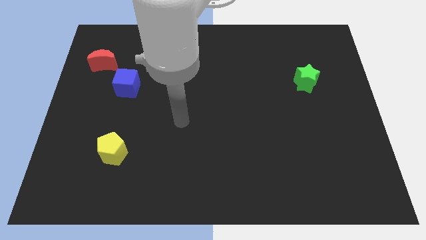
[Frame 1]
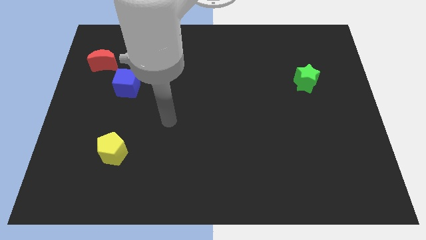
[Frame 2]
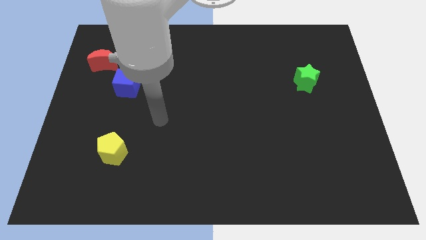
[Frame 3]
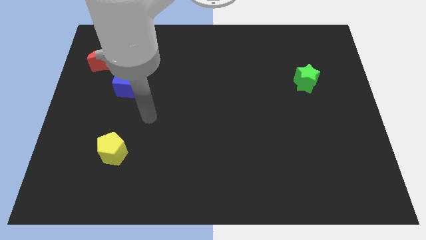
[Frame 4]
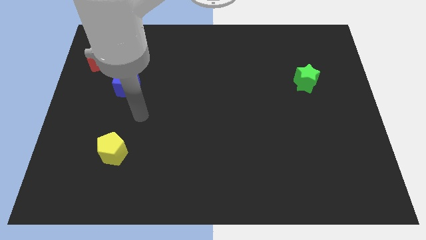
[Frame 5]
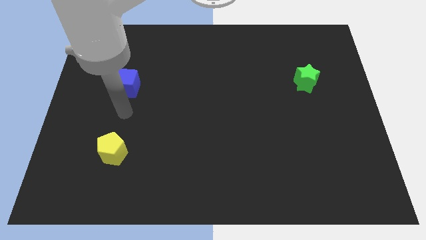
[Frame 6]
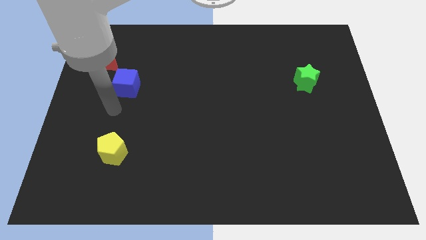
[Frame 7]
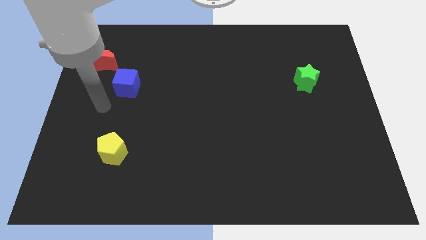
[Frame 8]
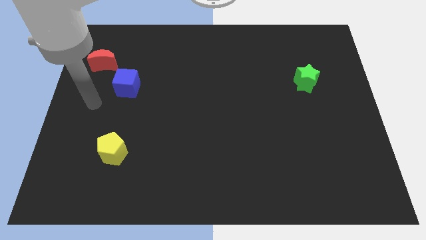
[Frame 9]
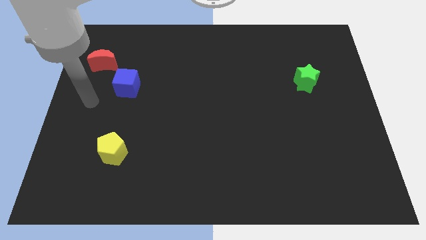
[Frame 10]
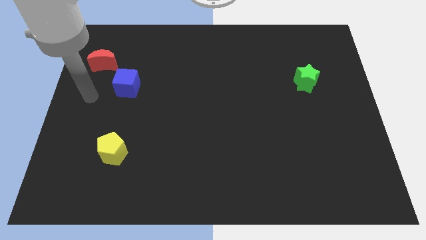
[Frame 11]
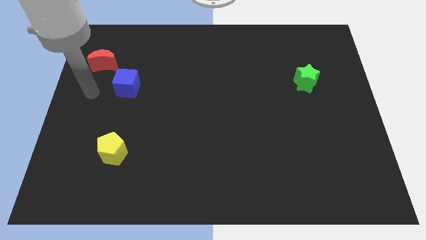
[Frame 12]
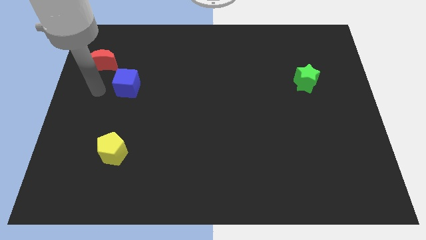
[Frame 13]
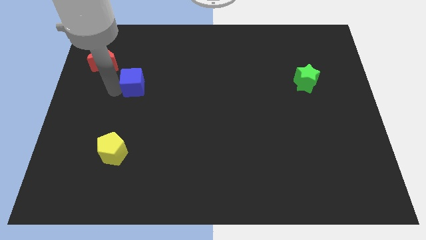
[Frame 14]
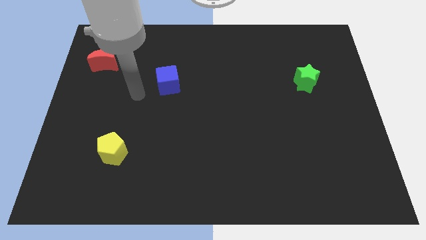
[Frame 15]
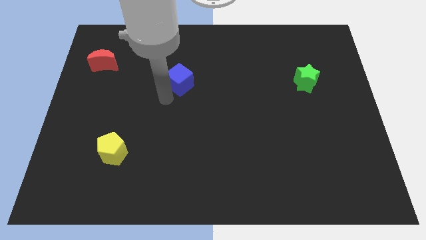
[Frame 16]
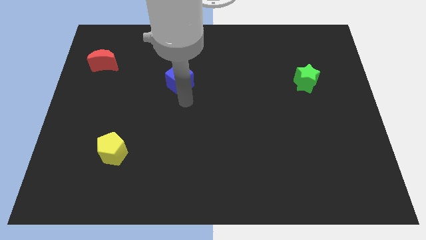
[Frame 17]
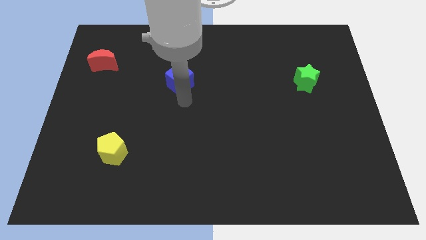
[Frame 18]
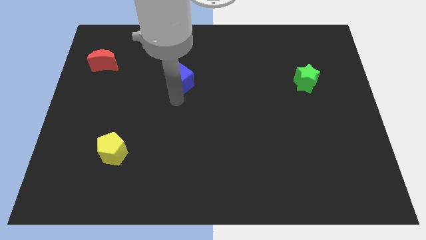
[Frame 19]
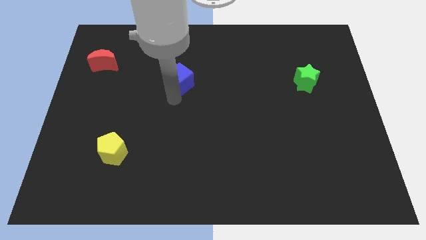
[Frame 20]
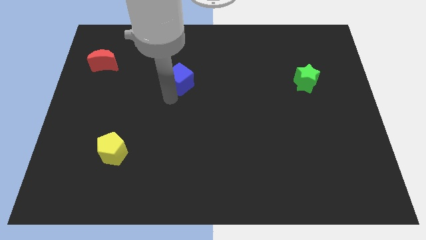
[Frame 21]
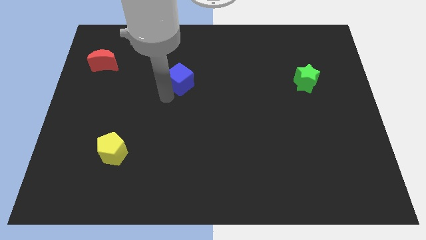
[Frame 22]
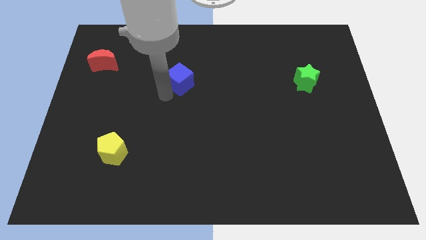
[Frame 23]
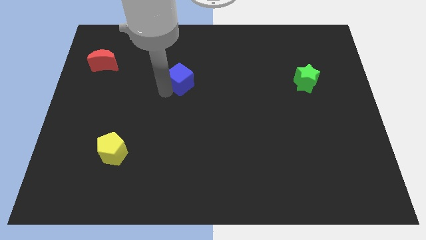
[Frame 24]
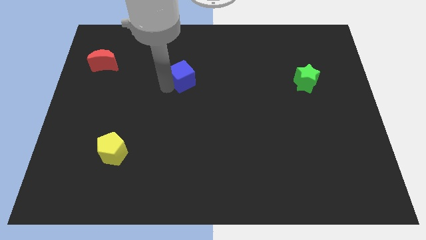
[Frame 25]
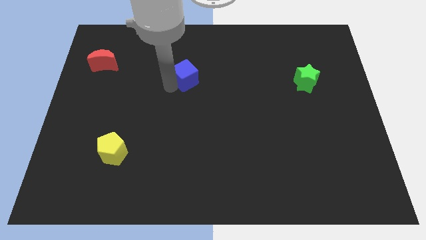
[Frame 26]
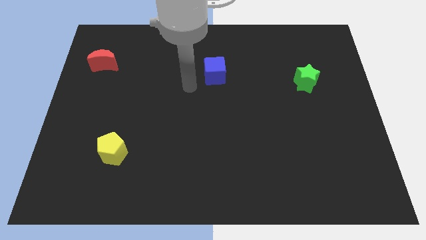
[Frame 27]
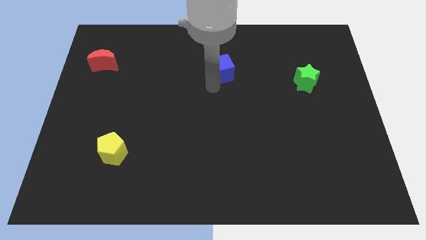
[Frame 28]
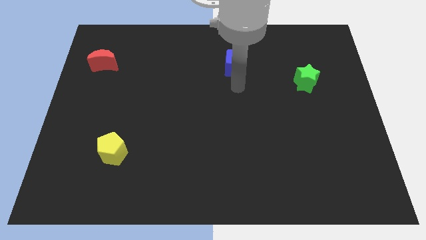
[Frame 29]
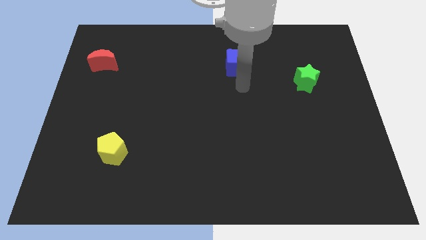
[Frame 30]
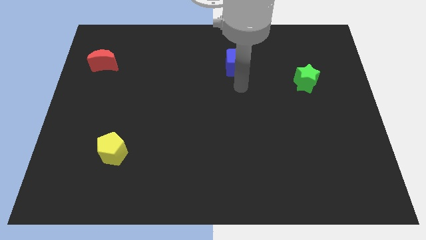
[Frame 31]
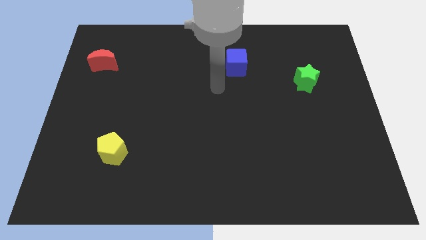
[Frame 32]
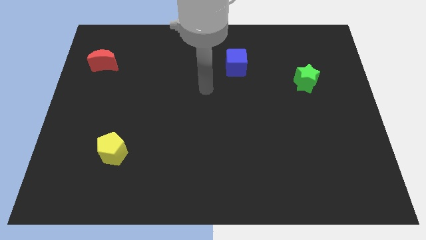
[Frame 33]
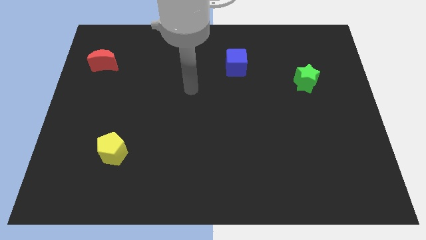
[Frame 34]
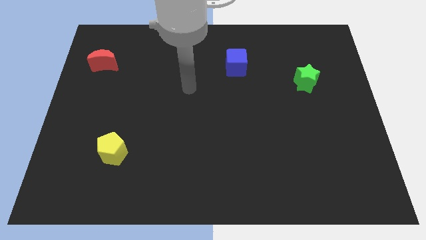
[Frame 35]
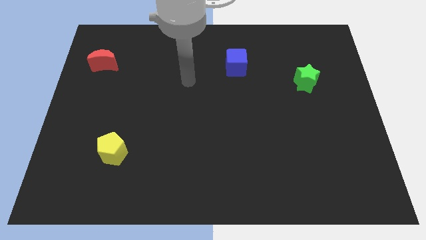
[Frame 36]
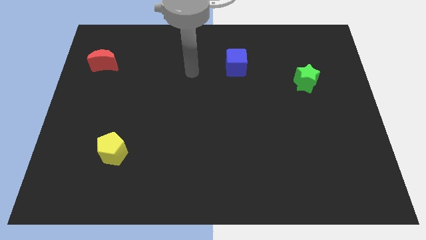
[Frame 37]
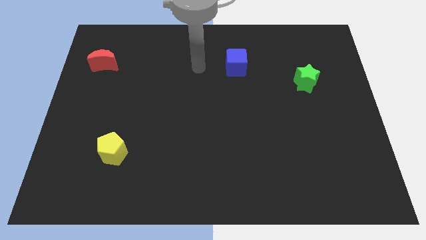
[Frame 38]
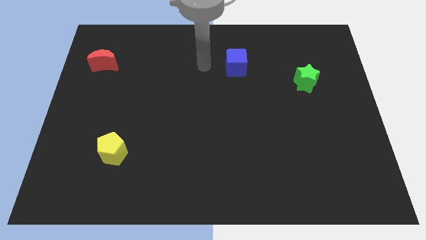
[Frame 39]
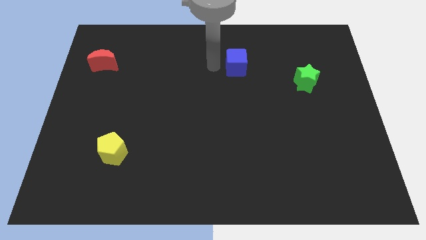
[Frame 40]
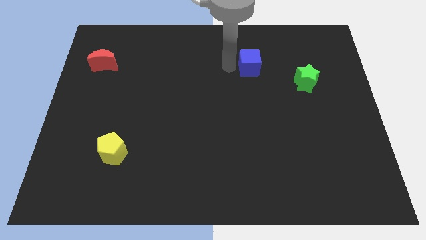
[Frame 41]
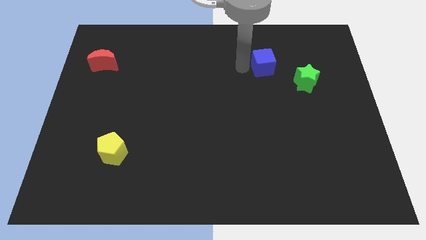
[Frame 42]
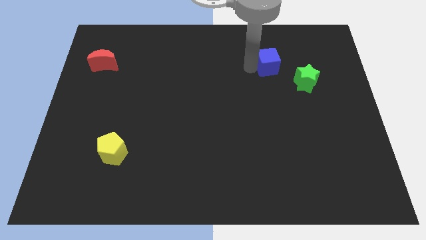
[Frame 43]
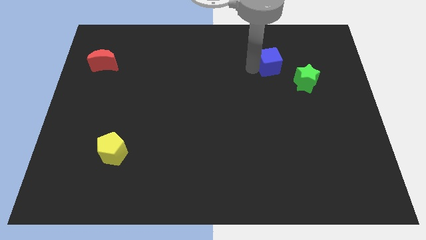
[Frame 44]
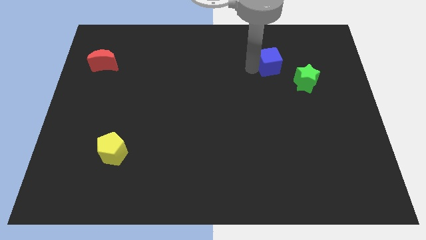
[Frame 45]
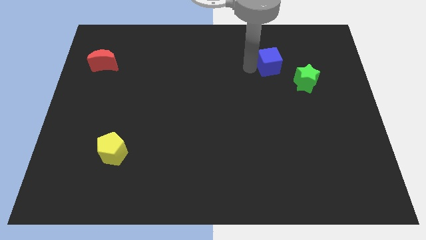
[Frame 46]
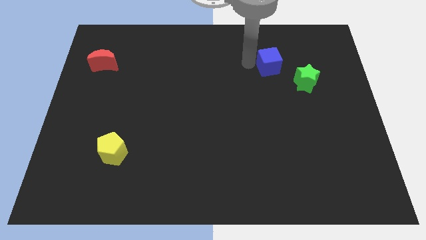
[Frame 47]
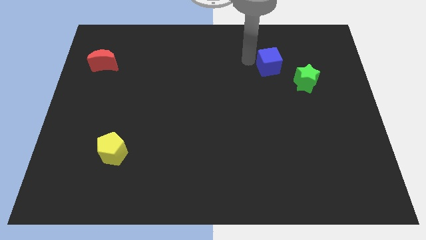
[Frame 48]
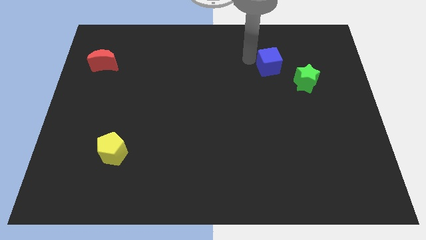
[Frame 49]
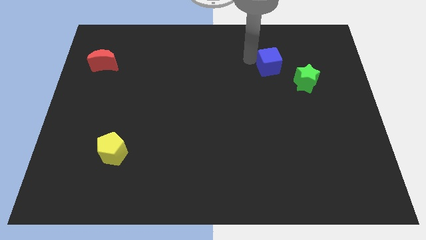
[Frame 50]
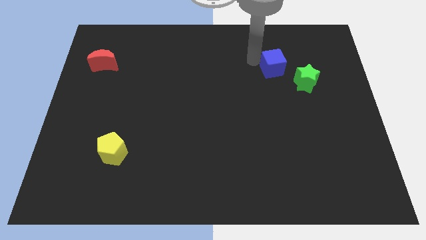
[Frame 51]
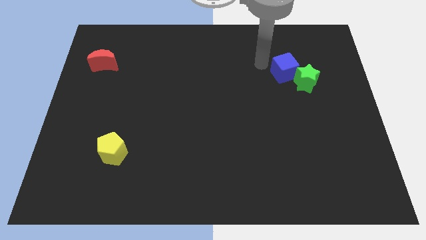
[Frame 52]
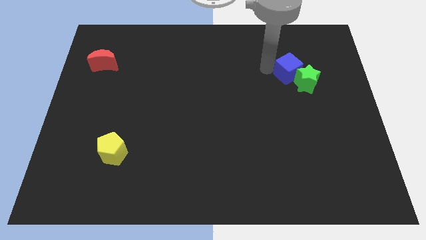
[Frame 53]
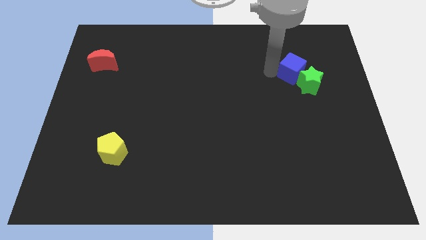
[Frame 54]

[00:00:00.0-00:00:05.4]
slide the blue cube close to the green block

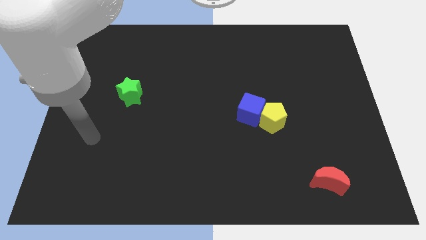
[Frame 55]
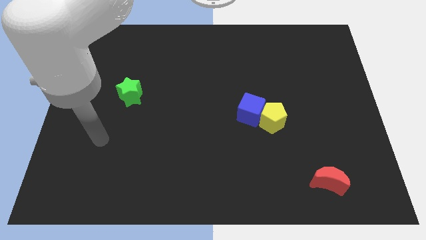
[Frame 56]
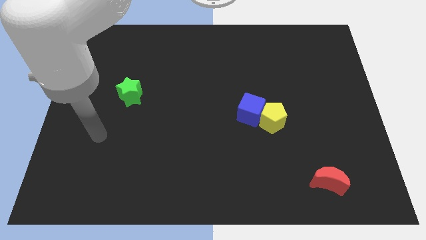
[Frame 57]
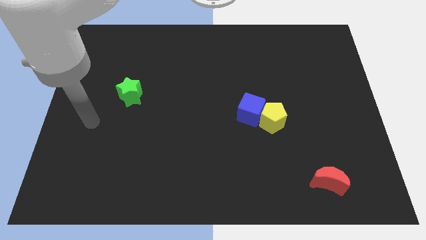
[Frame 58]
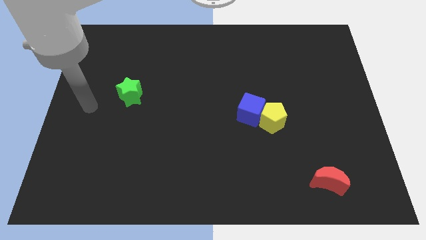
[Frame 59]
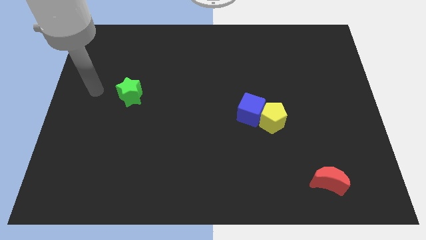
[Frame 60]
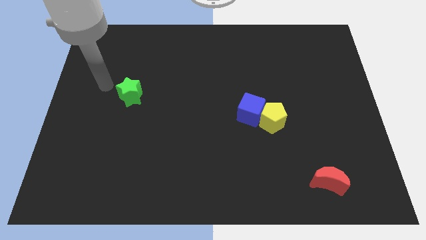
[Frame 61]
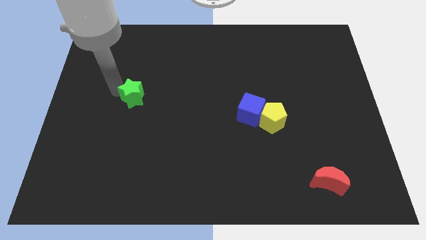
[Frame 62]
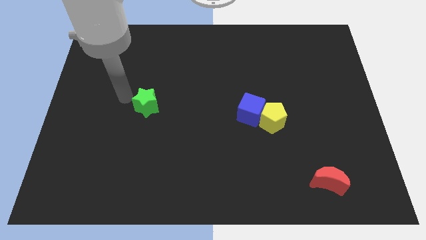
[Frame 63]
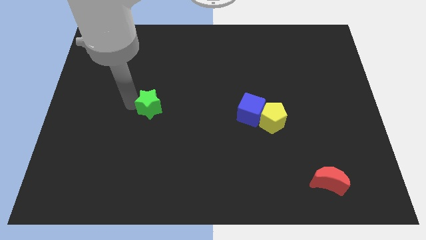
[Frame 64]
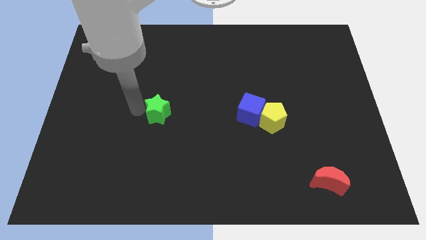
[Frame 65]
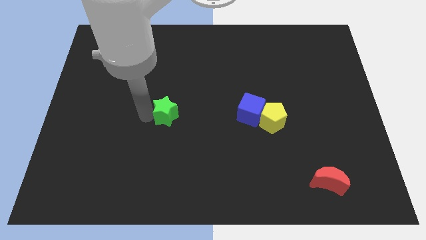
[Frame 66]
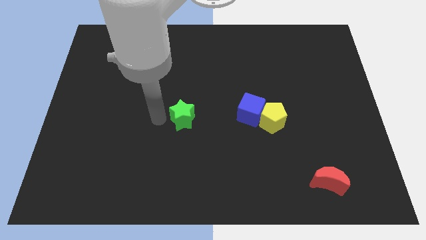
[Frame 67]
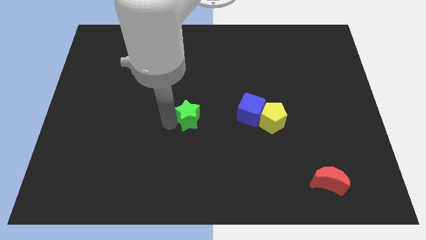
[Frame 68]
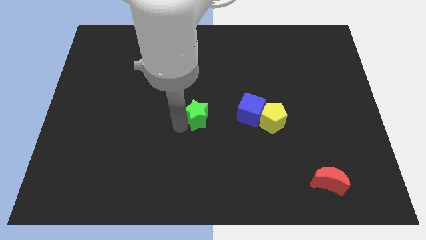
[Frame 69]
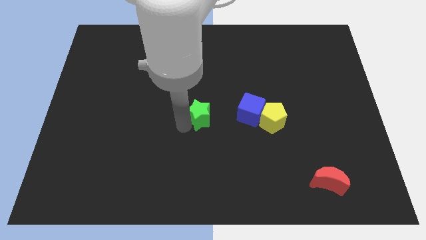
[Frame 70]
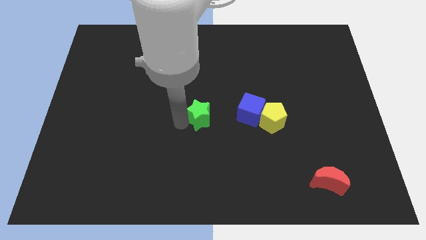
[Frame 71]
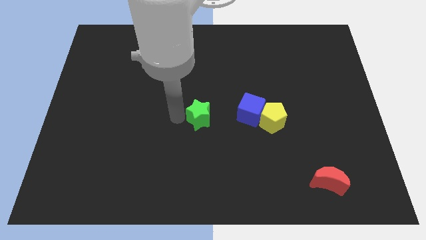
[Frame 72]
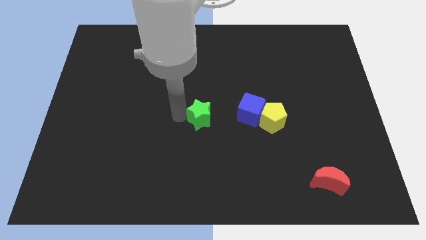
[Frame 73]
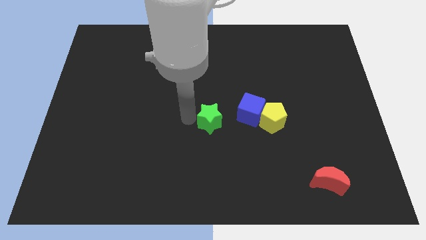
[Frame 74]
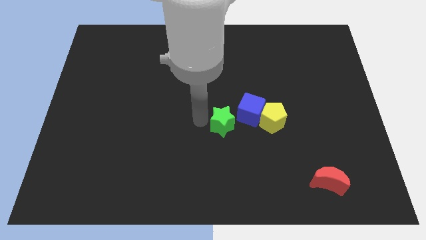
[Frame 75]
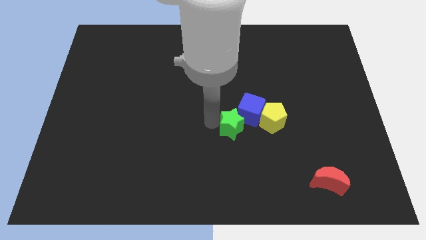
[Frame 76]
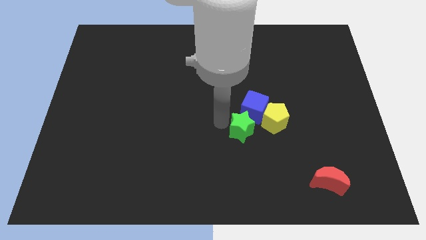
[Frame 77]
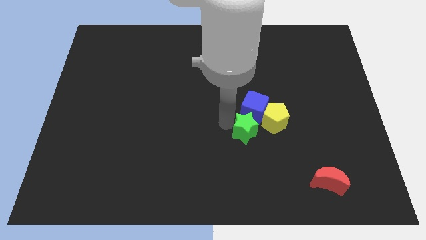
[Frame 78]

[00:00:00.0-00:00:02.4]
put the green block close to the blue block

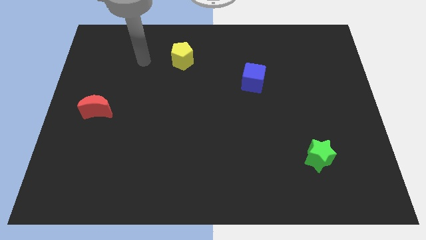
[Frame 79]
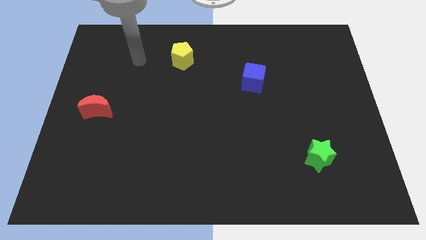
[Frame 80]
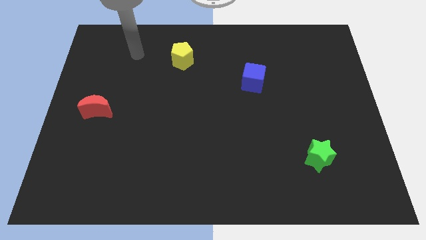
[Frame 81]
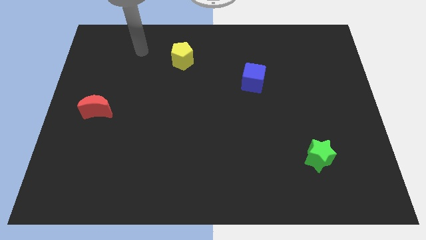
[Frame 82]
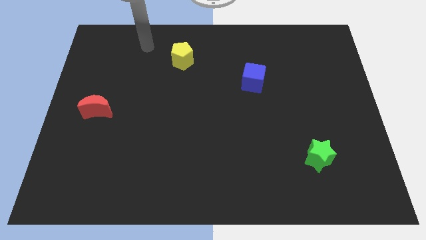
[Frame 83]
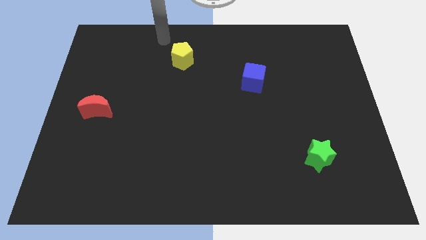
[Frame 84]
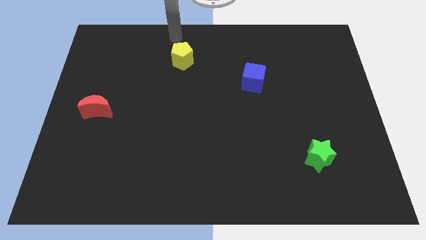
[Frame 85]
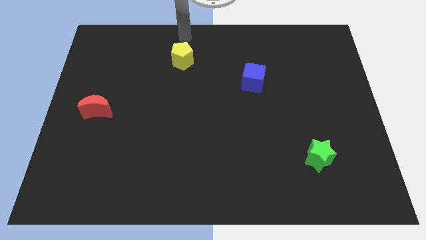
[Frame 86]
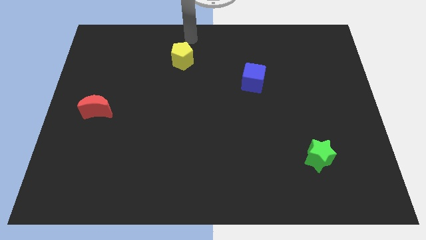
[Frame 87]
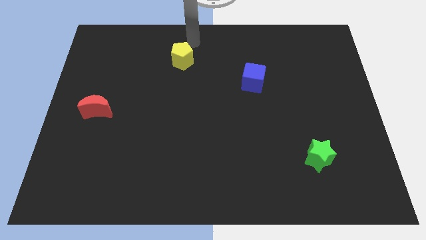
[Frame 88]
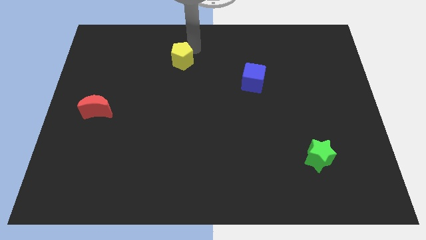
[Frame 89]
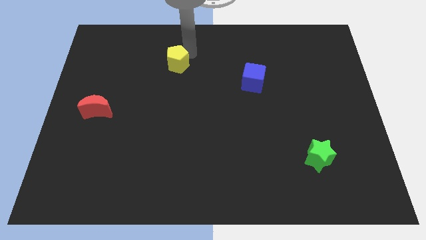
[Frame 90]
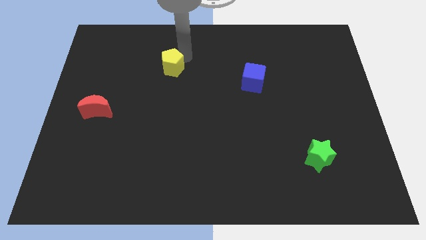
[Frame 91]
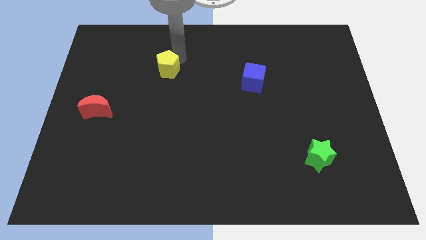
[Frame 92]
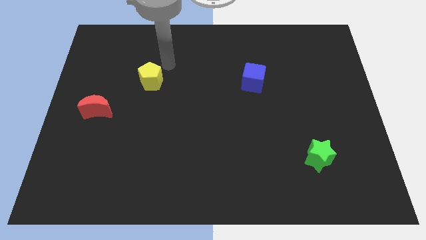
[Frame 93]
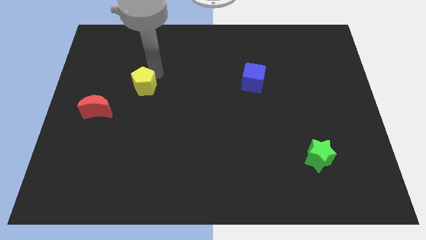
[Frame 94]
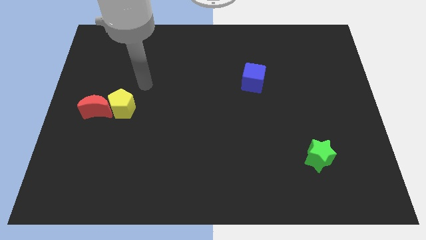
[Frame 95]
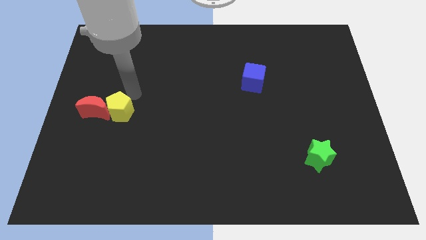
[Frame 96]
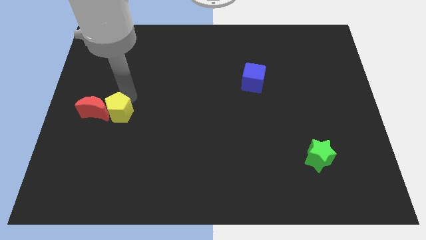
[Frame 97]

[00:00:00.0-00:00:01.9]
slide the pentagon next to the red moon
